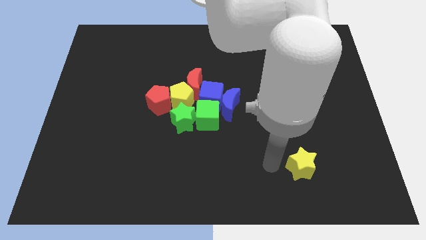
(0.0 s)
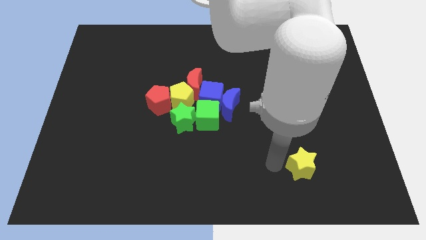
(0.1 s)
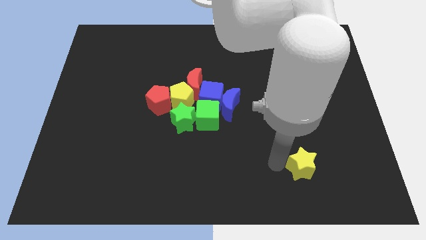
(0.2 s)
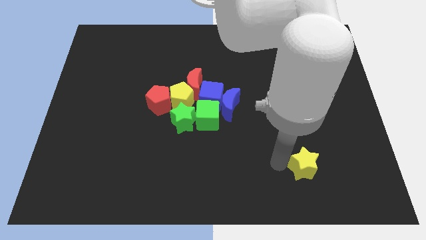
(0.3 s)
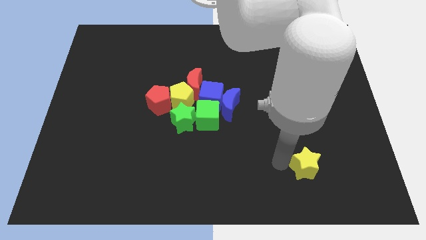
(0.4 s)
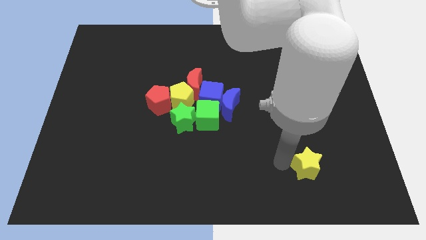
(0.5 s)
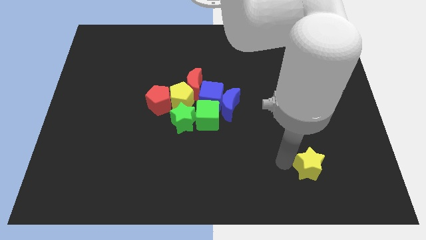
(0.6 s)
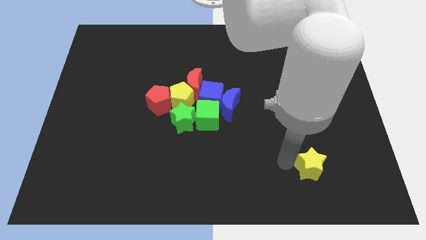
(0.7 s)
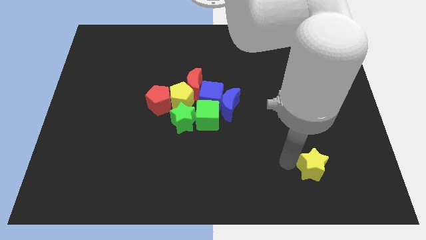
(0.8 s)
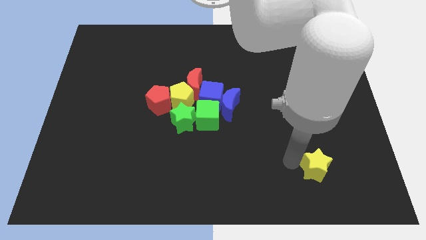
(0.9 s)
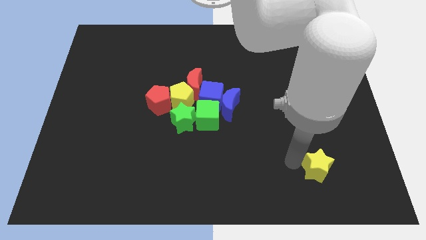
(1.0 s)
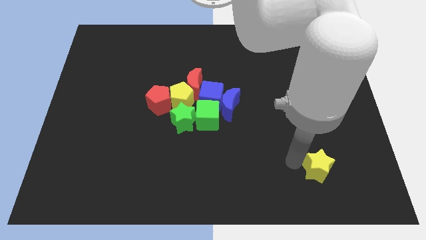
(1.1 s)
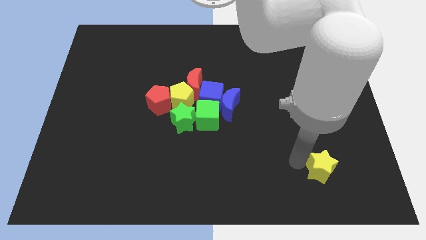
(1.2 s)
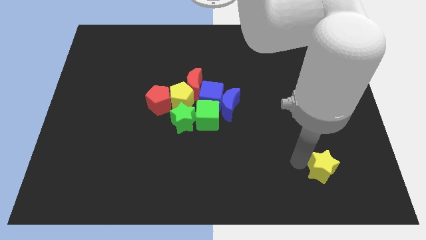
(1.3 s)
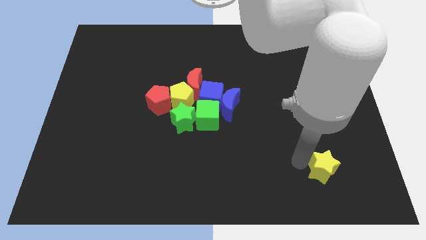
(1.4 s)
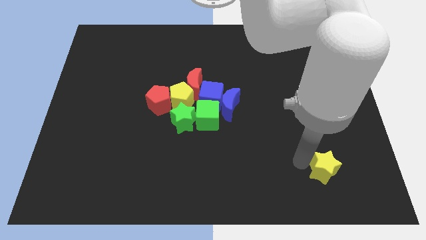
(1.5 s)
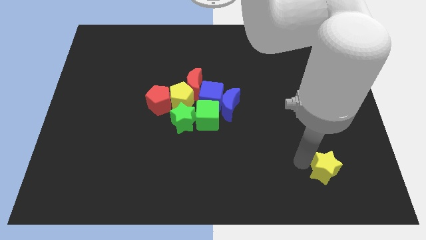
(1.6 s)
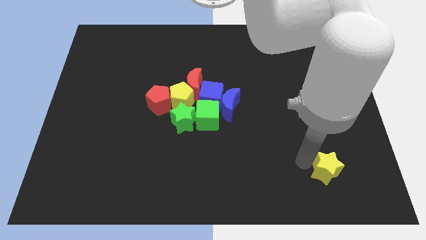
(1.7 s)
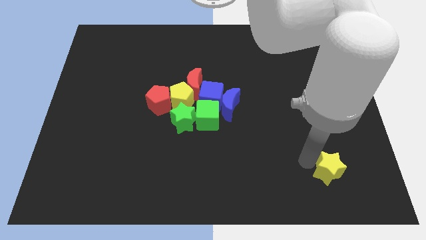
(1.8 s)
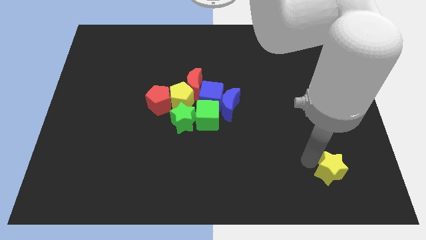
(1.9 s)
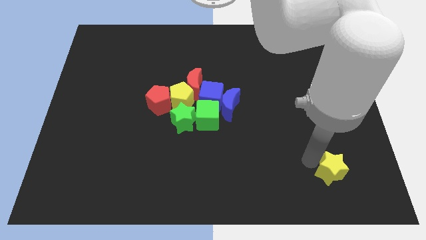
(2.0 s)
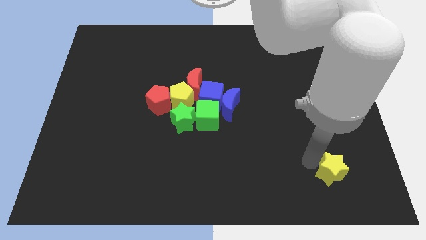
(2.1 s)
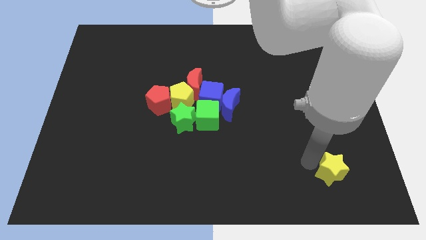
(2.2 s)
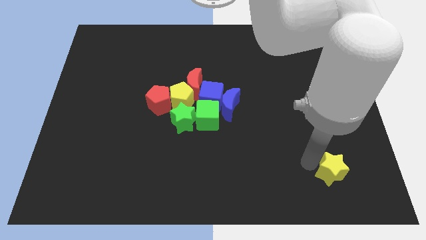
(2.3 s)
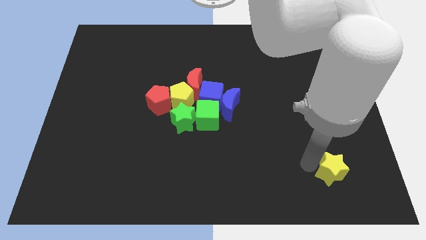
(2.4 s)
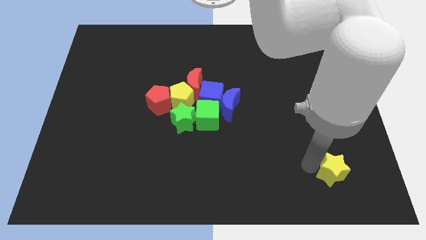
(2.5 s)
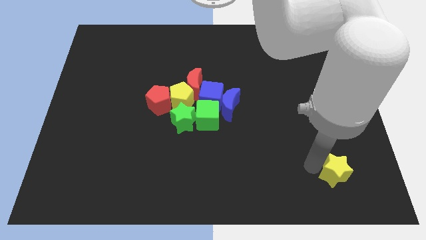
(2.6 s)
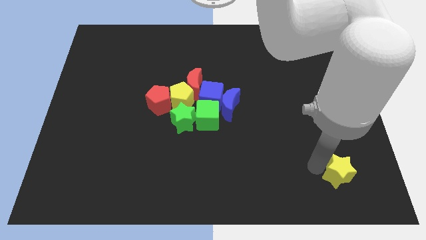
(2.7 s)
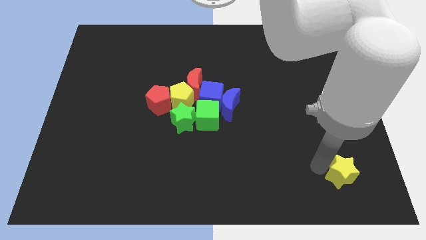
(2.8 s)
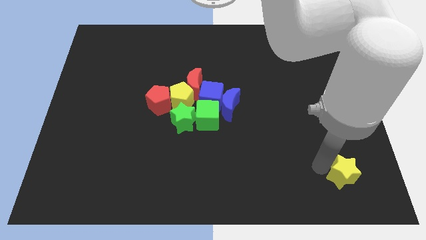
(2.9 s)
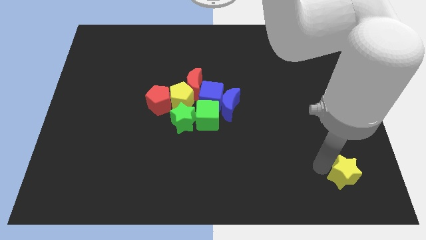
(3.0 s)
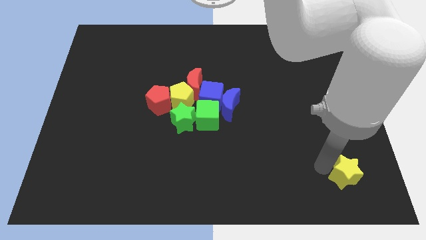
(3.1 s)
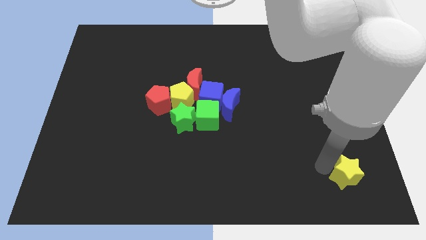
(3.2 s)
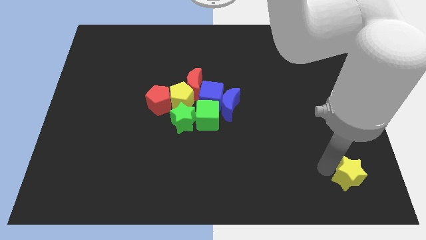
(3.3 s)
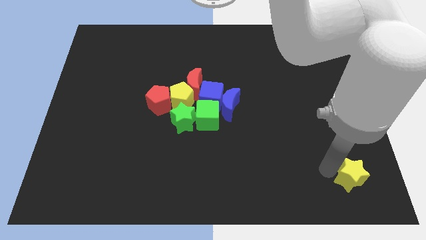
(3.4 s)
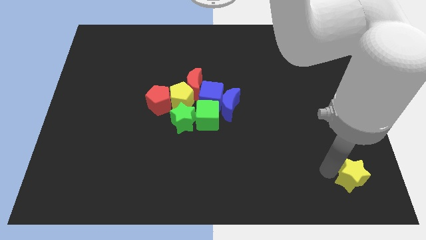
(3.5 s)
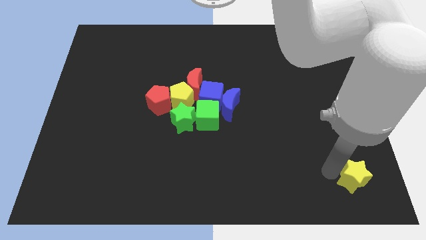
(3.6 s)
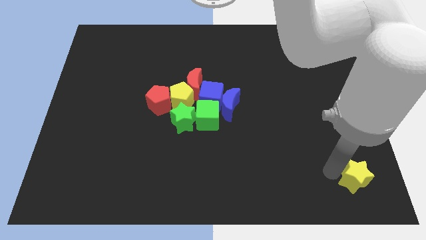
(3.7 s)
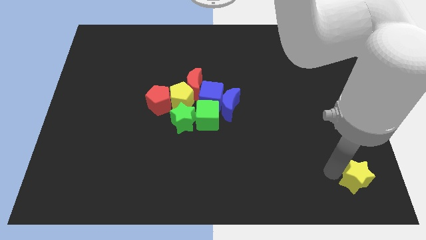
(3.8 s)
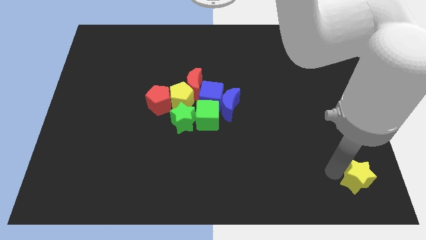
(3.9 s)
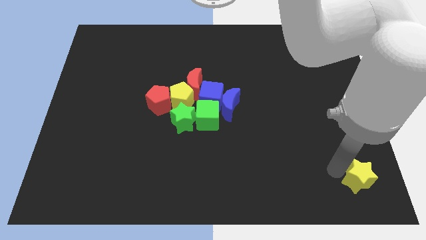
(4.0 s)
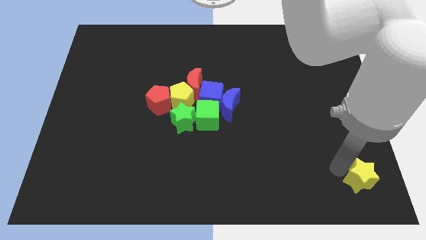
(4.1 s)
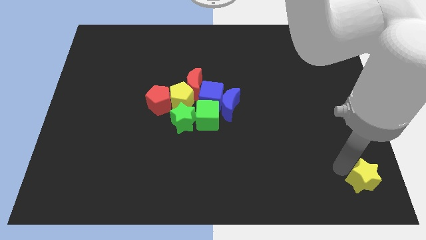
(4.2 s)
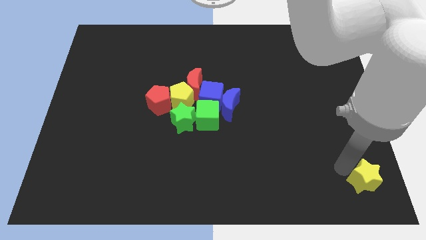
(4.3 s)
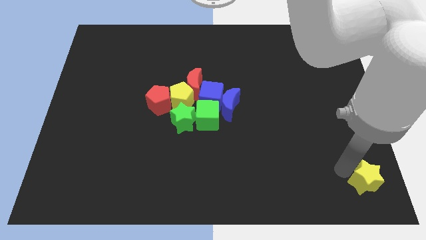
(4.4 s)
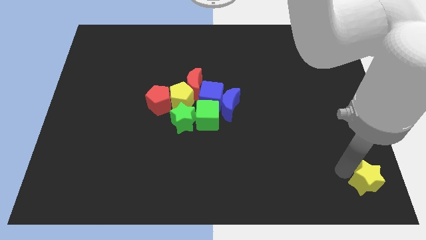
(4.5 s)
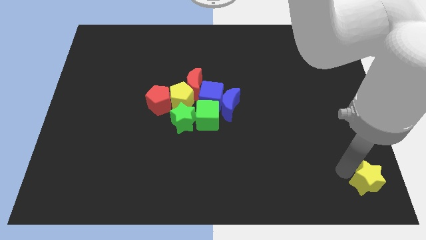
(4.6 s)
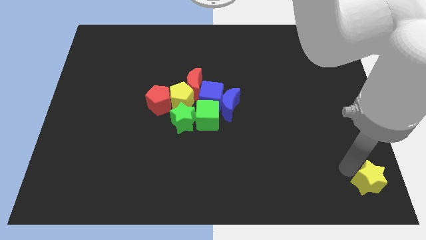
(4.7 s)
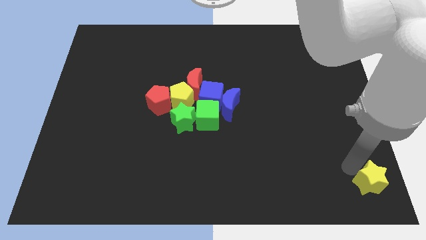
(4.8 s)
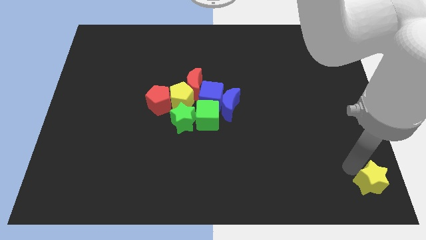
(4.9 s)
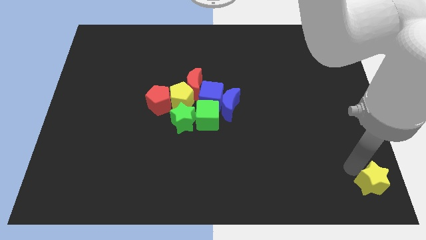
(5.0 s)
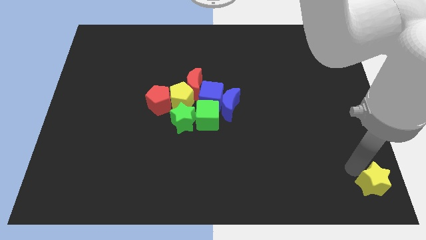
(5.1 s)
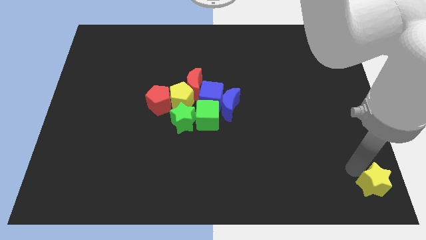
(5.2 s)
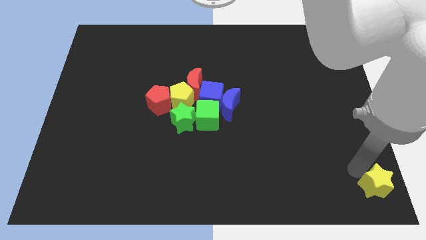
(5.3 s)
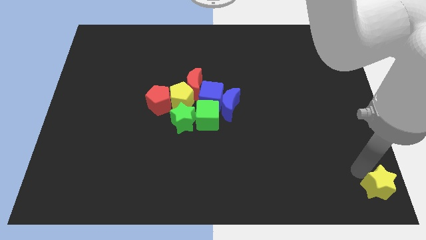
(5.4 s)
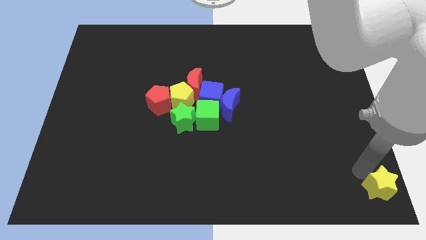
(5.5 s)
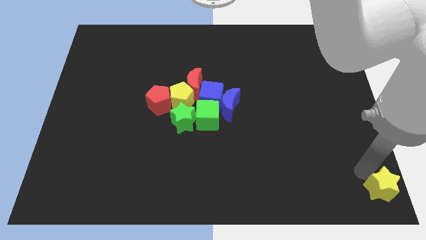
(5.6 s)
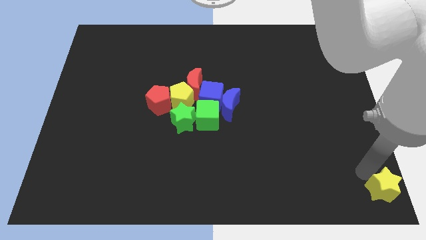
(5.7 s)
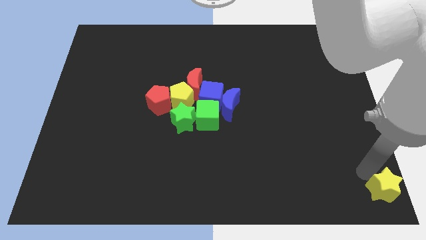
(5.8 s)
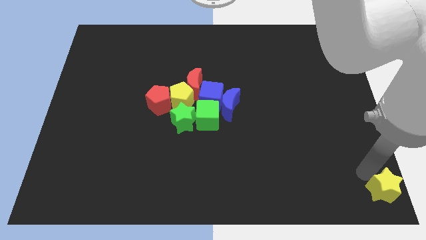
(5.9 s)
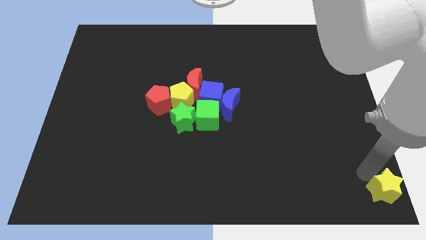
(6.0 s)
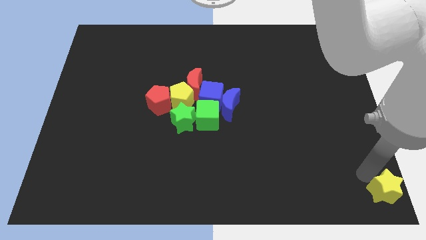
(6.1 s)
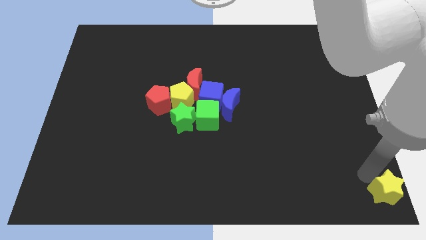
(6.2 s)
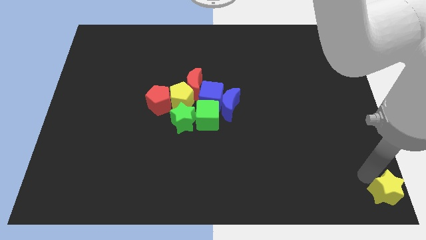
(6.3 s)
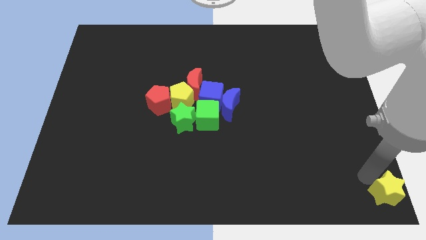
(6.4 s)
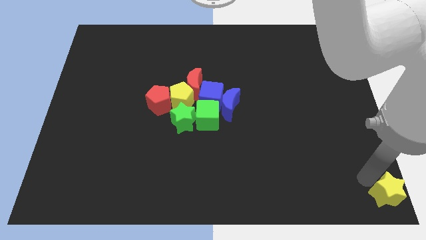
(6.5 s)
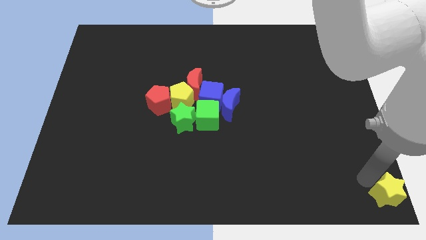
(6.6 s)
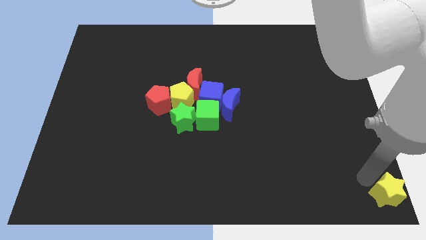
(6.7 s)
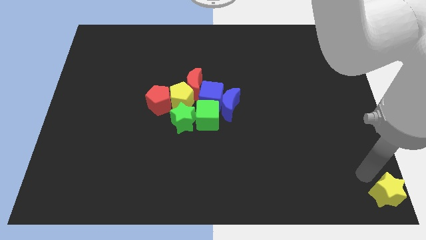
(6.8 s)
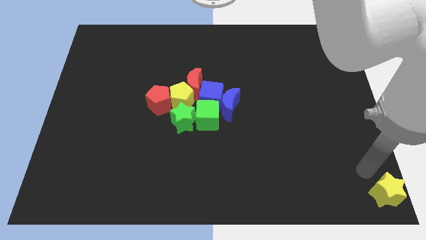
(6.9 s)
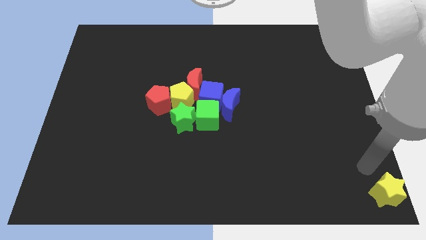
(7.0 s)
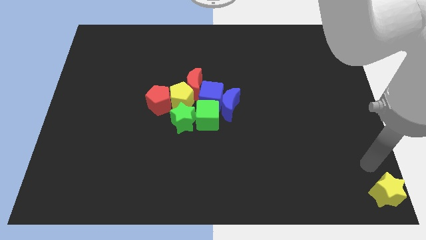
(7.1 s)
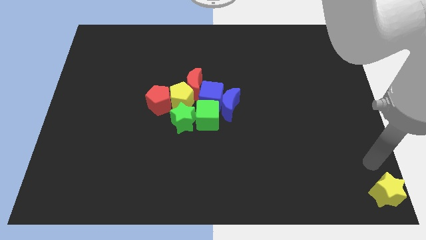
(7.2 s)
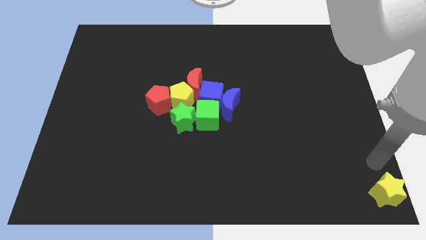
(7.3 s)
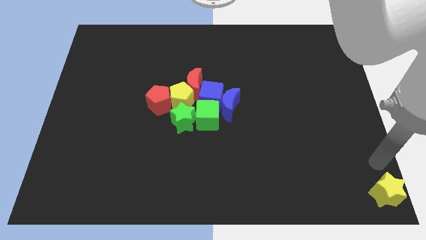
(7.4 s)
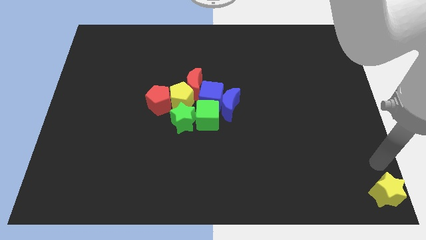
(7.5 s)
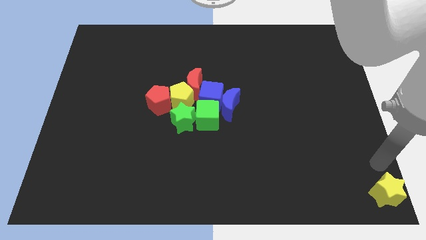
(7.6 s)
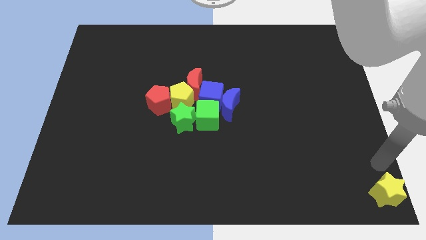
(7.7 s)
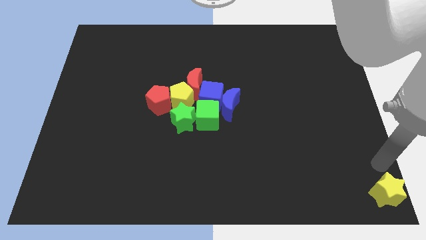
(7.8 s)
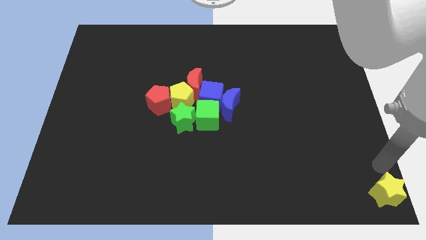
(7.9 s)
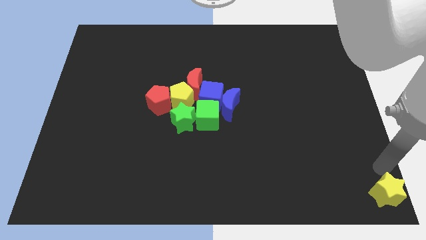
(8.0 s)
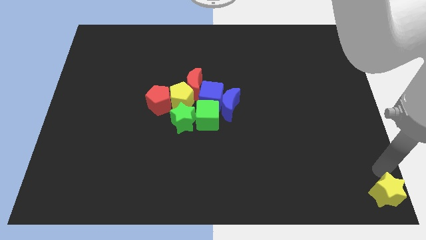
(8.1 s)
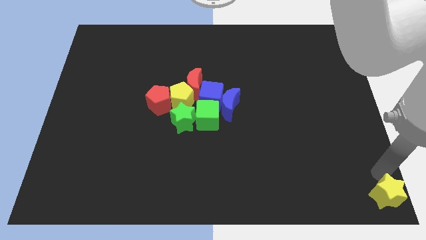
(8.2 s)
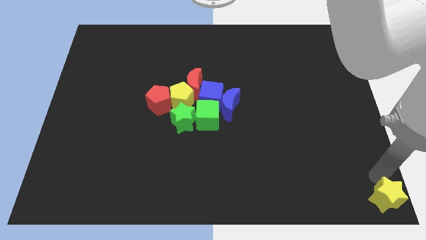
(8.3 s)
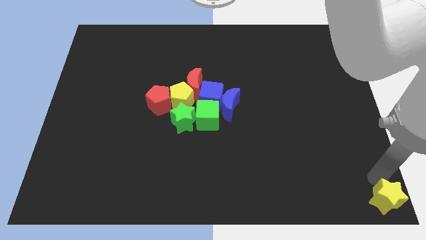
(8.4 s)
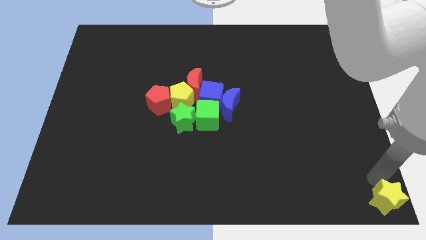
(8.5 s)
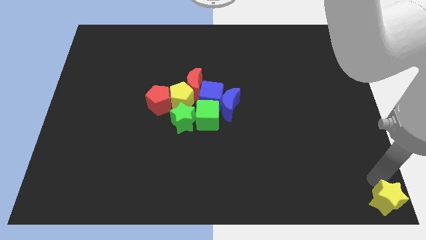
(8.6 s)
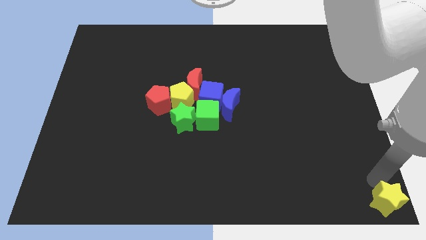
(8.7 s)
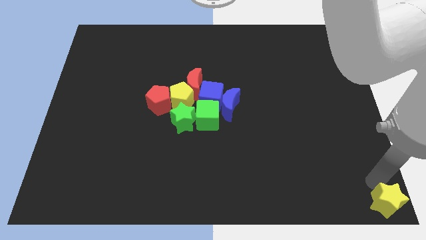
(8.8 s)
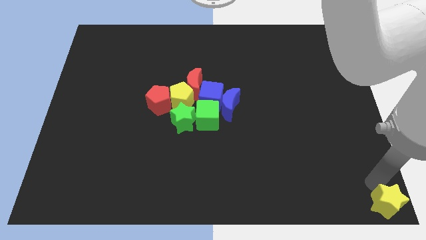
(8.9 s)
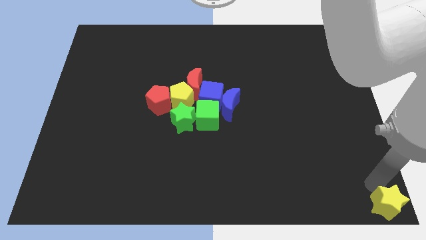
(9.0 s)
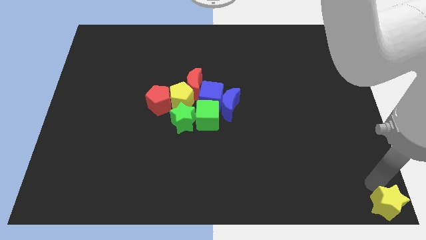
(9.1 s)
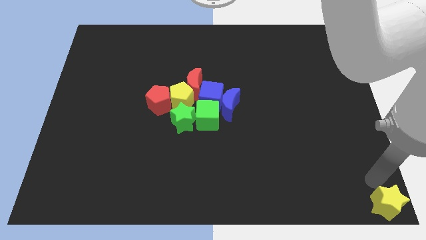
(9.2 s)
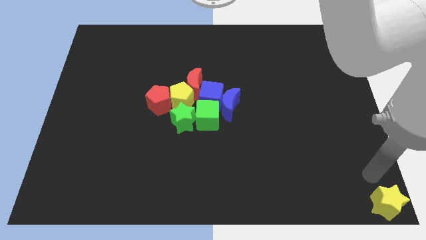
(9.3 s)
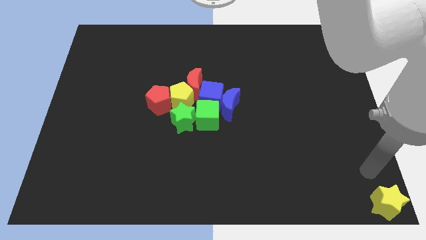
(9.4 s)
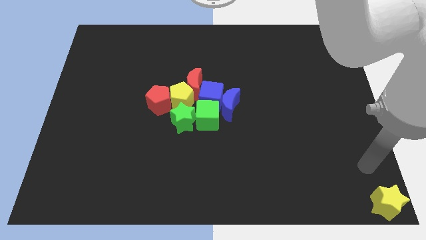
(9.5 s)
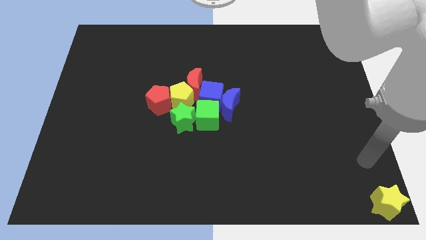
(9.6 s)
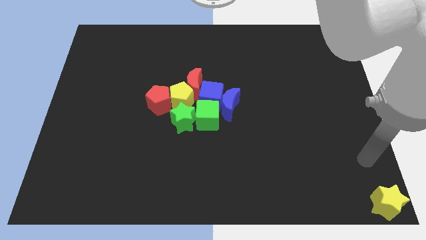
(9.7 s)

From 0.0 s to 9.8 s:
push yellow star to the bottom right corner
